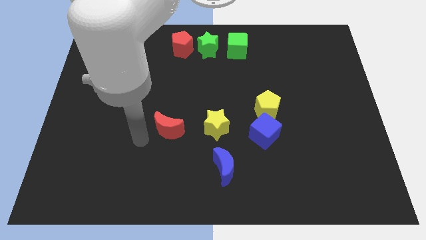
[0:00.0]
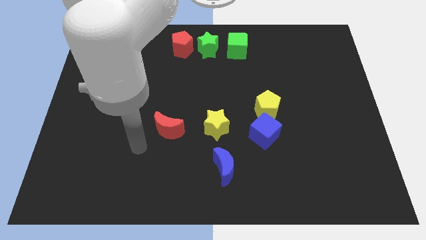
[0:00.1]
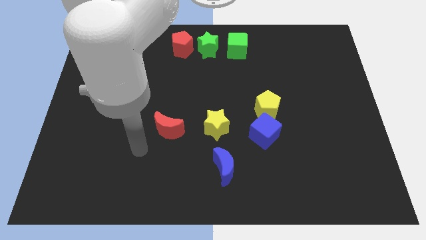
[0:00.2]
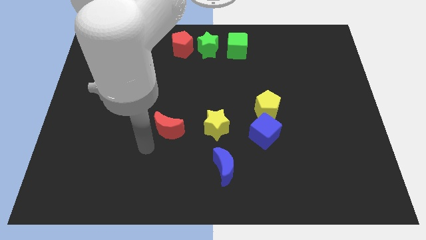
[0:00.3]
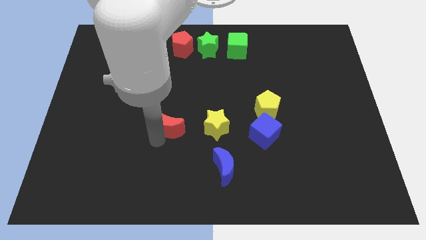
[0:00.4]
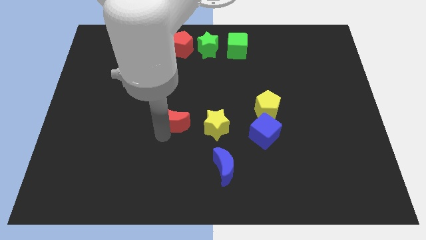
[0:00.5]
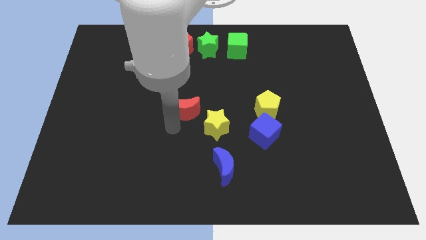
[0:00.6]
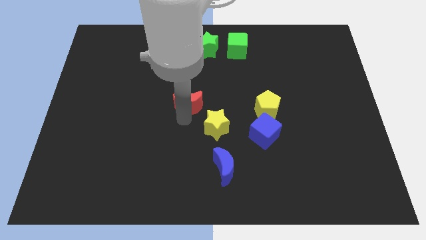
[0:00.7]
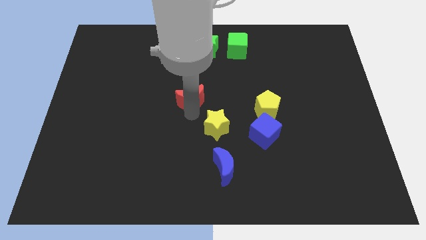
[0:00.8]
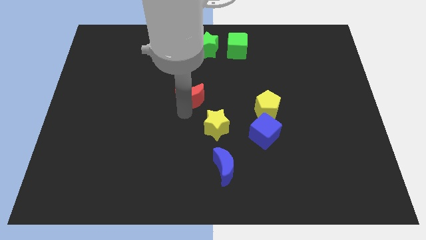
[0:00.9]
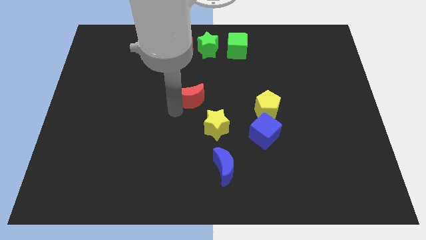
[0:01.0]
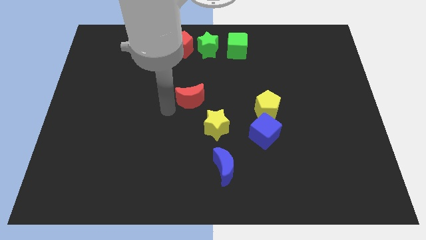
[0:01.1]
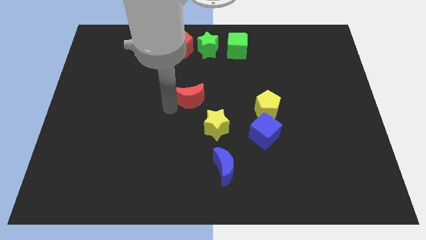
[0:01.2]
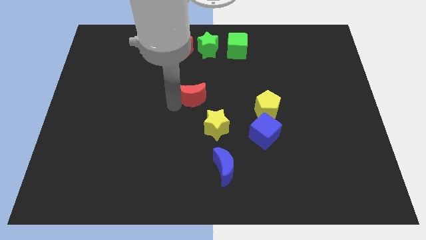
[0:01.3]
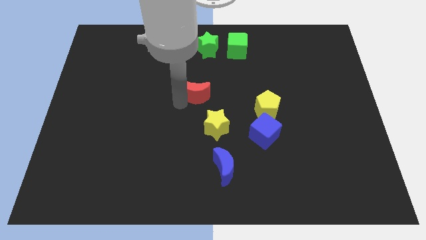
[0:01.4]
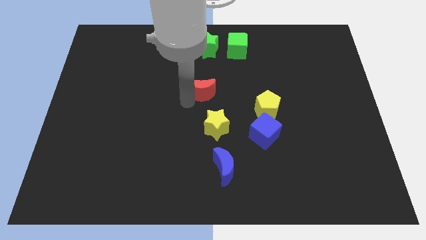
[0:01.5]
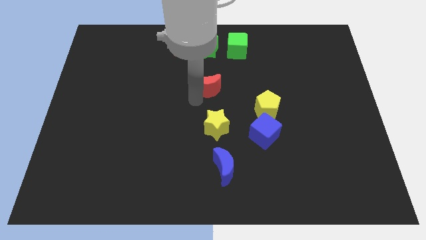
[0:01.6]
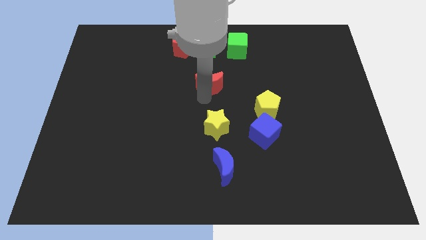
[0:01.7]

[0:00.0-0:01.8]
place the red crescent in between the two blocks

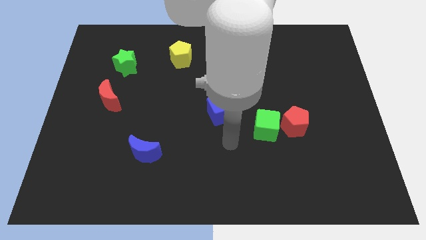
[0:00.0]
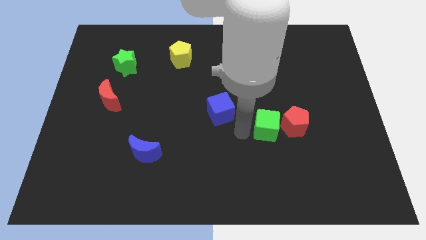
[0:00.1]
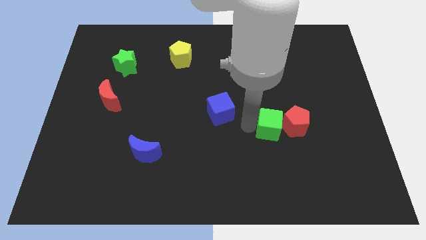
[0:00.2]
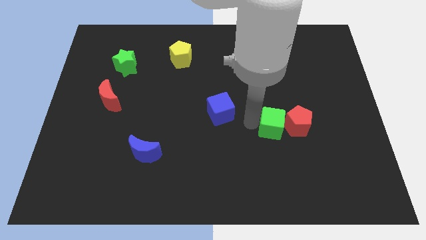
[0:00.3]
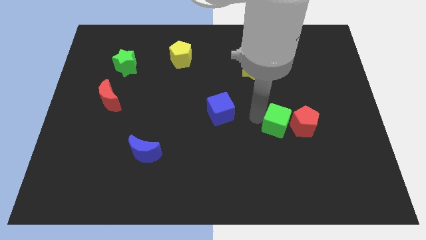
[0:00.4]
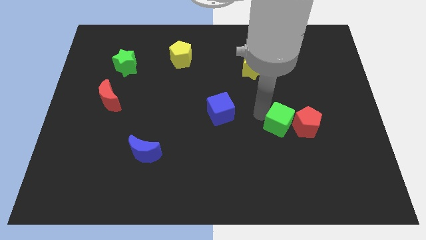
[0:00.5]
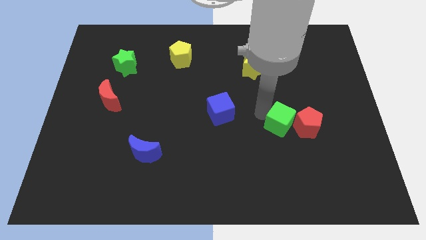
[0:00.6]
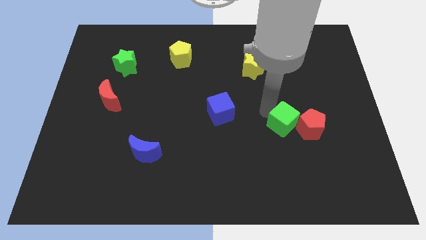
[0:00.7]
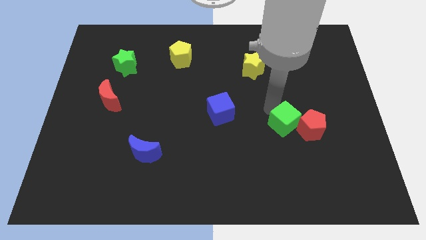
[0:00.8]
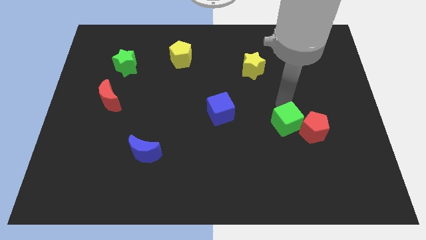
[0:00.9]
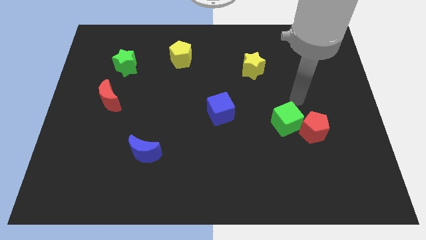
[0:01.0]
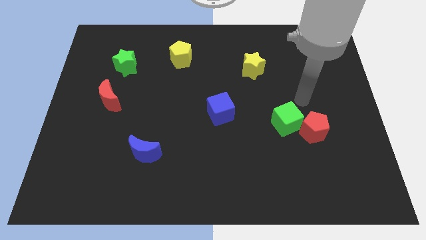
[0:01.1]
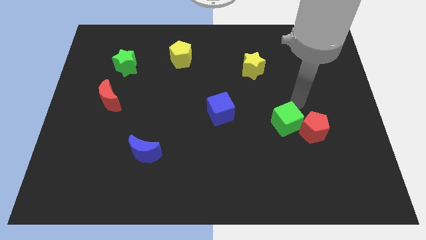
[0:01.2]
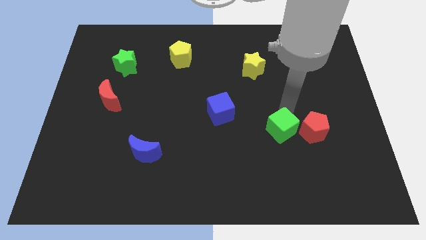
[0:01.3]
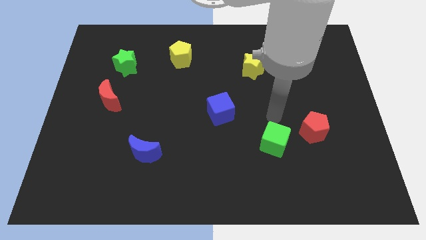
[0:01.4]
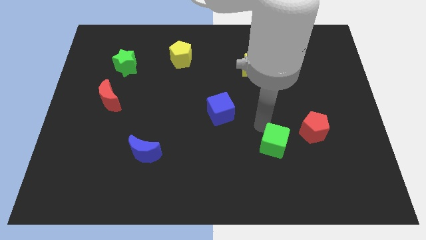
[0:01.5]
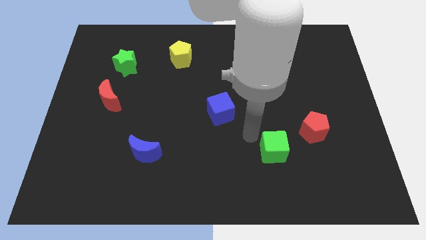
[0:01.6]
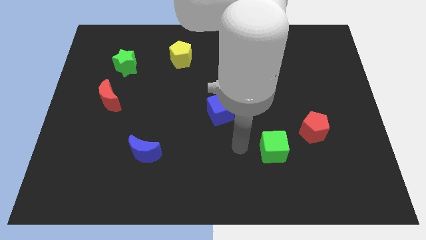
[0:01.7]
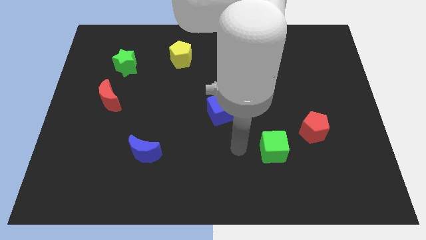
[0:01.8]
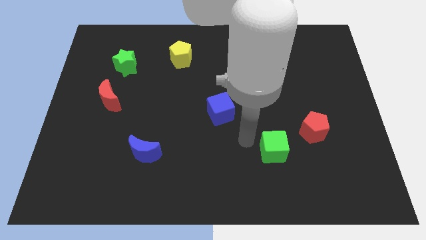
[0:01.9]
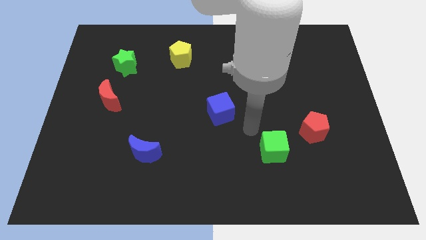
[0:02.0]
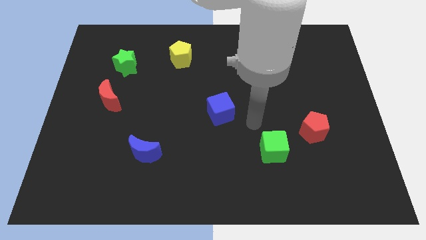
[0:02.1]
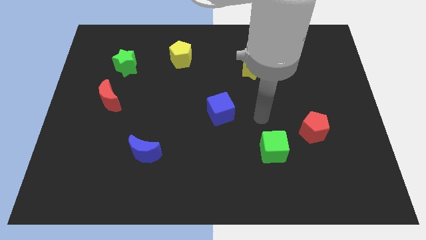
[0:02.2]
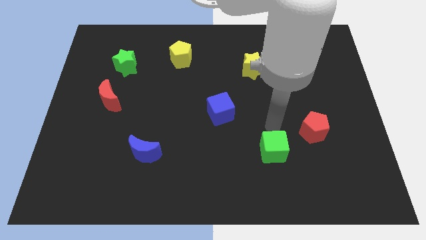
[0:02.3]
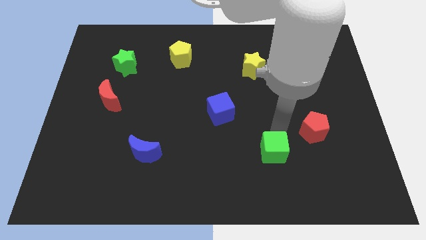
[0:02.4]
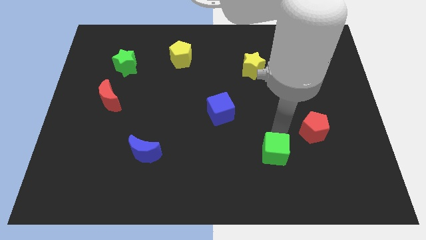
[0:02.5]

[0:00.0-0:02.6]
separate the green cube and red pentagon

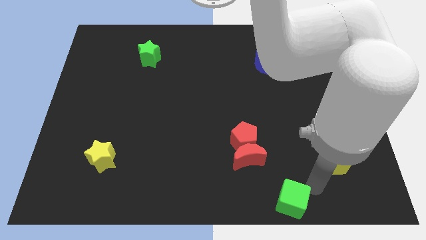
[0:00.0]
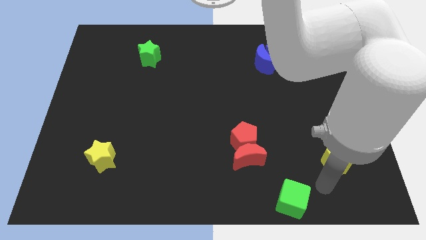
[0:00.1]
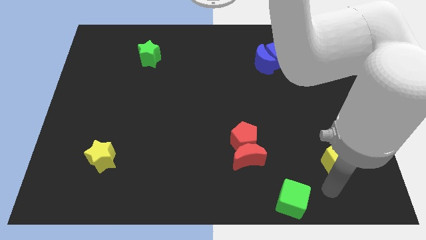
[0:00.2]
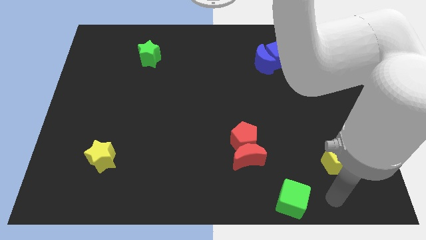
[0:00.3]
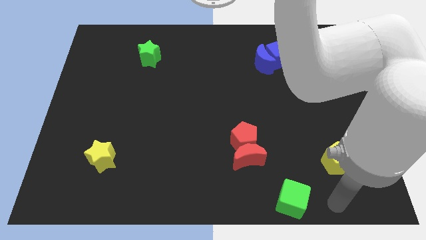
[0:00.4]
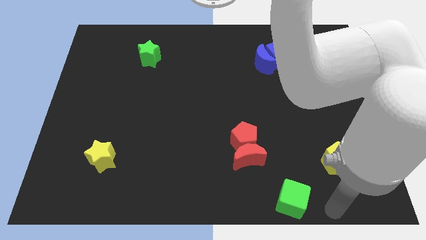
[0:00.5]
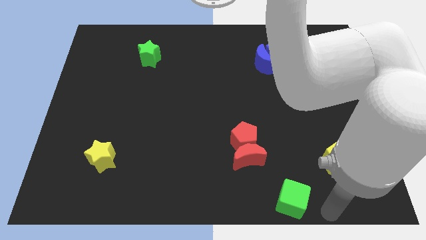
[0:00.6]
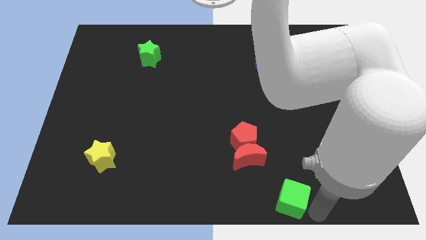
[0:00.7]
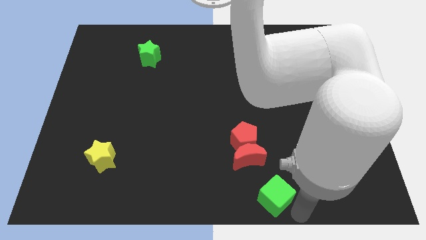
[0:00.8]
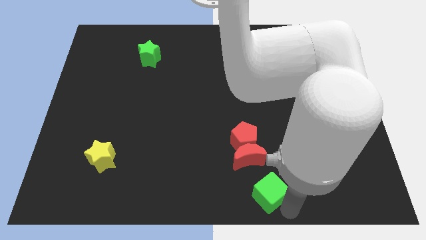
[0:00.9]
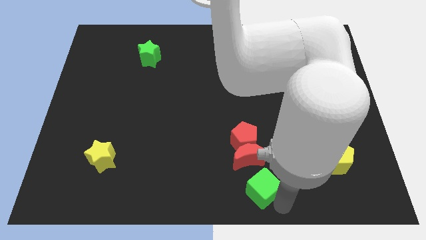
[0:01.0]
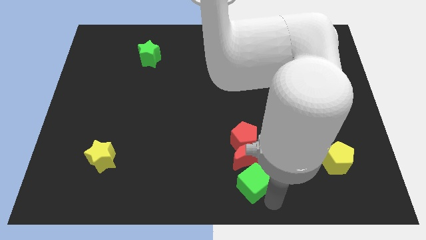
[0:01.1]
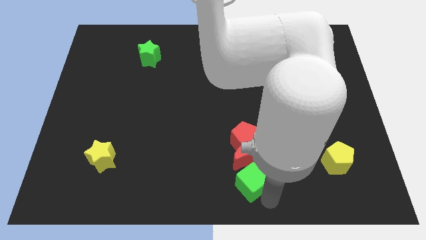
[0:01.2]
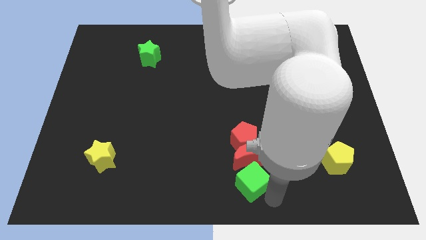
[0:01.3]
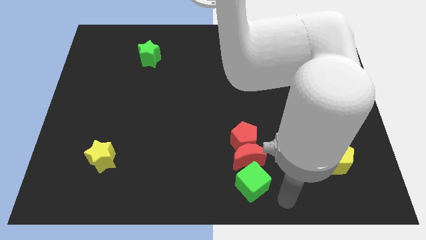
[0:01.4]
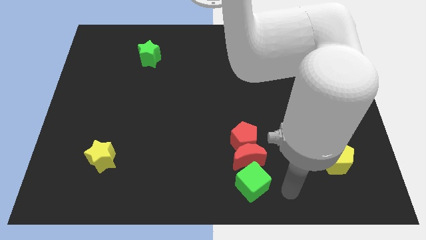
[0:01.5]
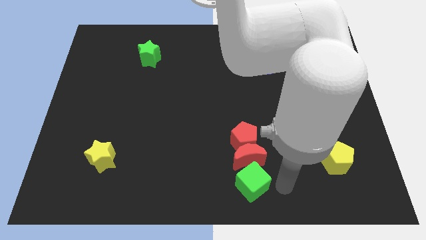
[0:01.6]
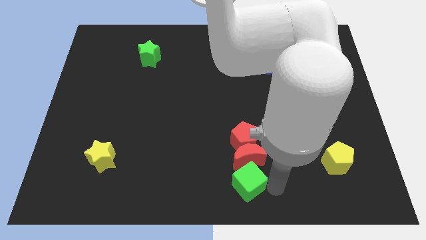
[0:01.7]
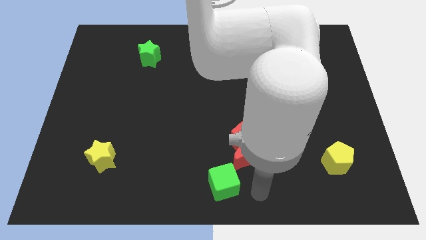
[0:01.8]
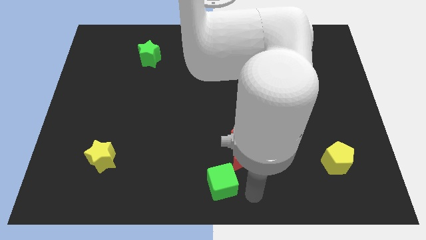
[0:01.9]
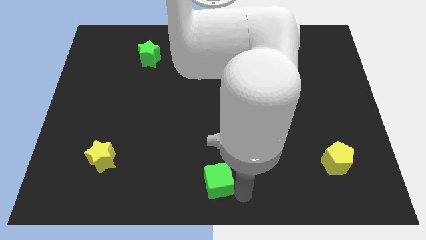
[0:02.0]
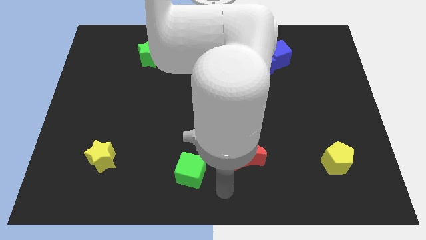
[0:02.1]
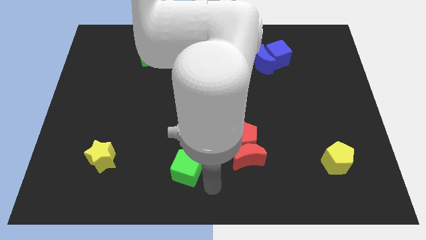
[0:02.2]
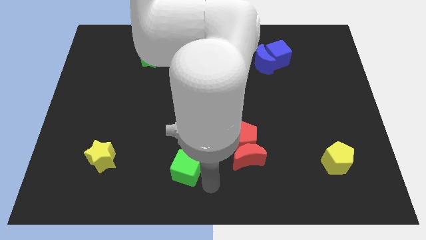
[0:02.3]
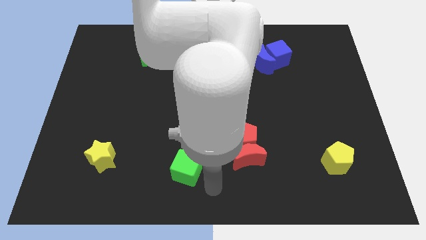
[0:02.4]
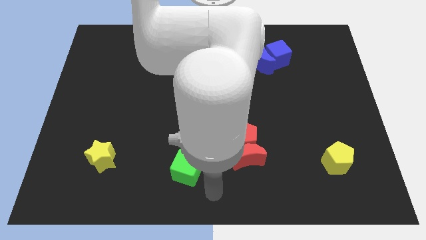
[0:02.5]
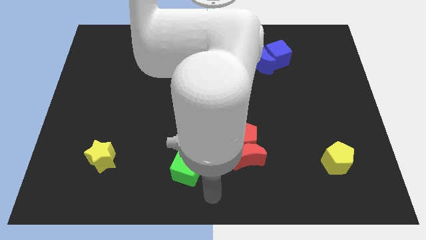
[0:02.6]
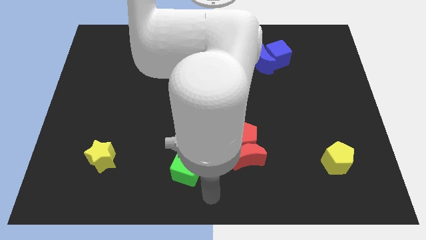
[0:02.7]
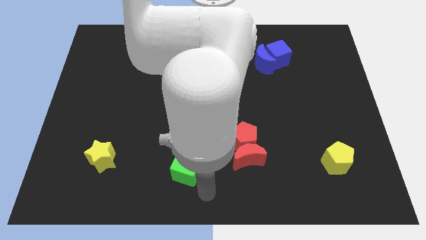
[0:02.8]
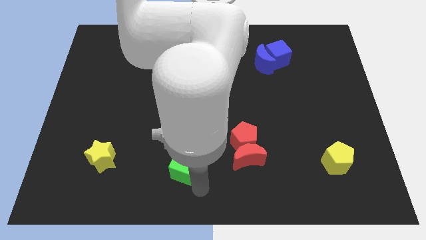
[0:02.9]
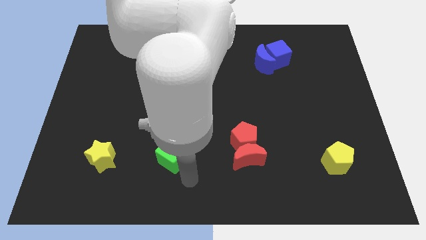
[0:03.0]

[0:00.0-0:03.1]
arrange the green cube in between the red crescent and the yellow star

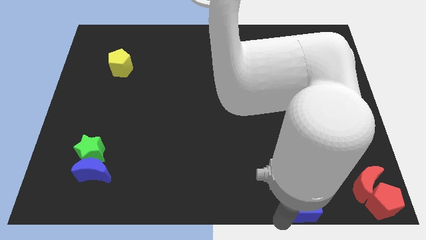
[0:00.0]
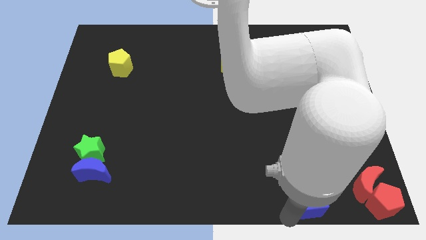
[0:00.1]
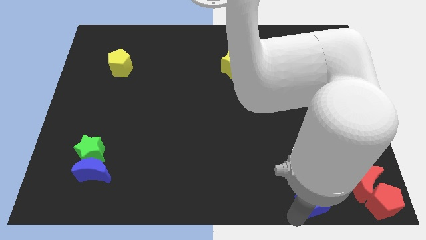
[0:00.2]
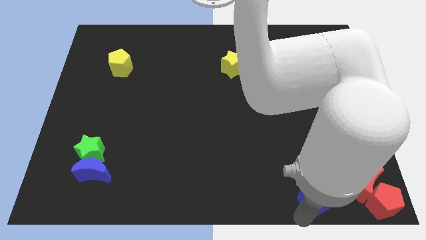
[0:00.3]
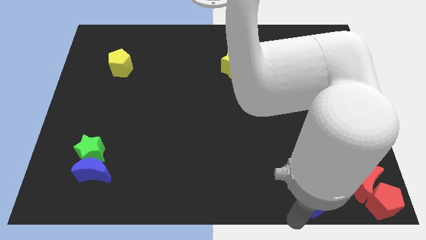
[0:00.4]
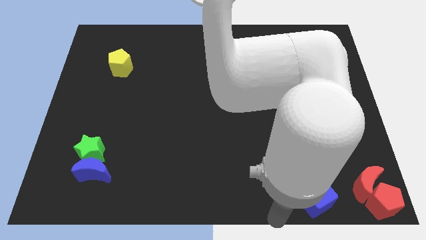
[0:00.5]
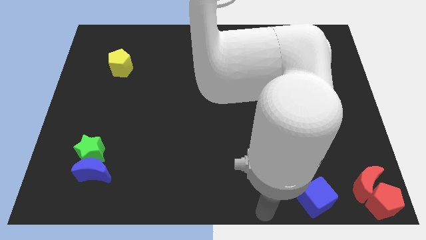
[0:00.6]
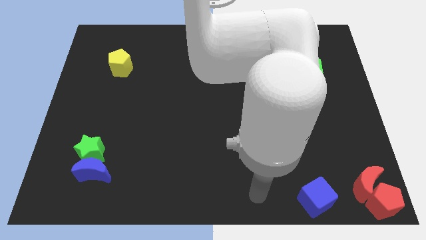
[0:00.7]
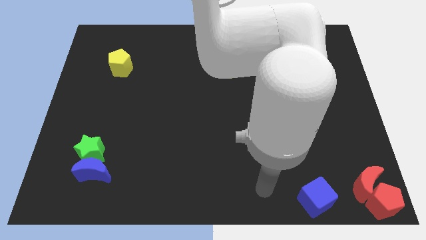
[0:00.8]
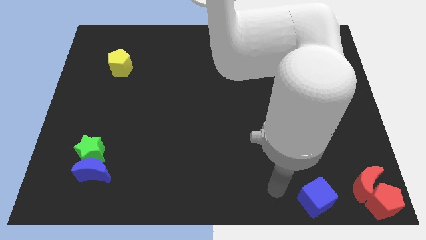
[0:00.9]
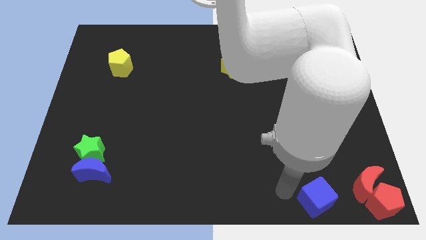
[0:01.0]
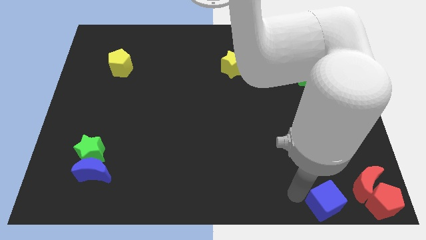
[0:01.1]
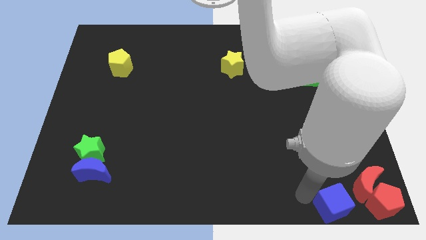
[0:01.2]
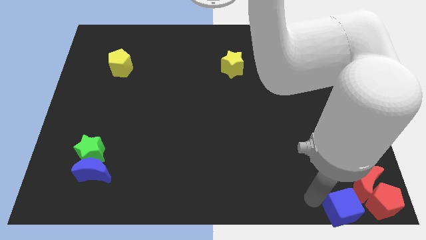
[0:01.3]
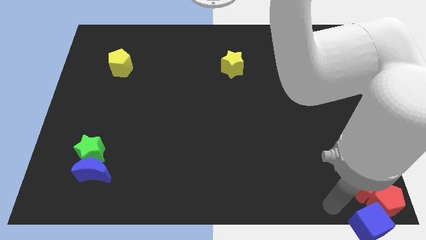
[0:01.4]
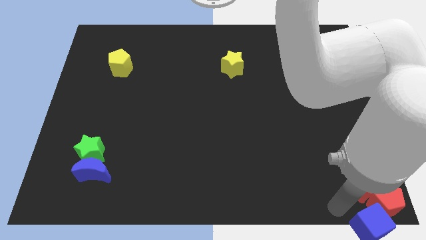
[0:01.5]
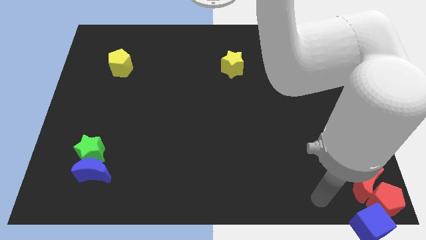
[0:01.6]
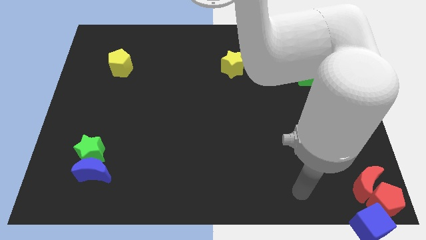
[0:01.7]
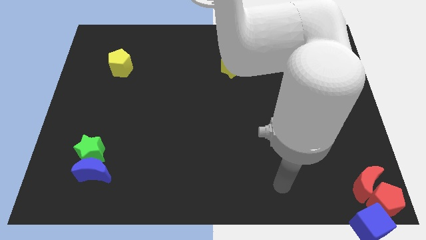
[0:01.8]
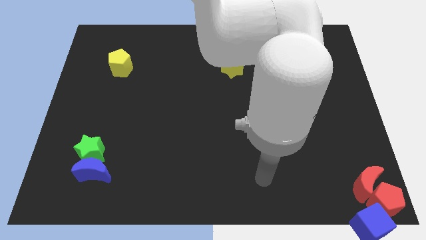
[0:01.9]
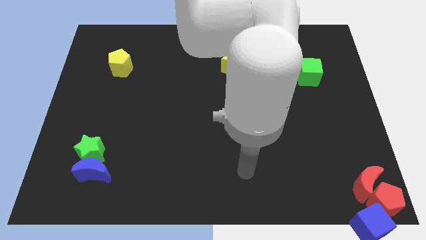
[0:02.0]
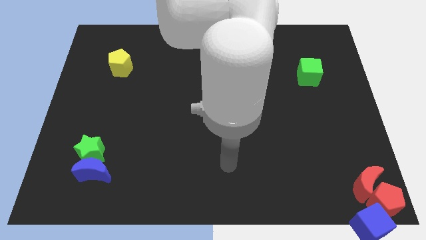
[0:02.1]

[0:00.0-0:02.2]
push the blue cube into the red pentagon
